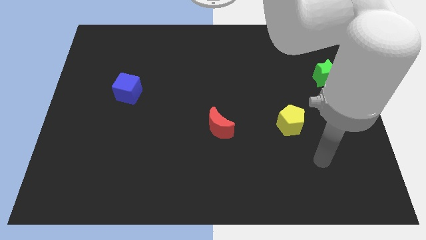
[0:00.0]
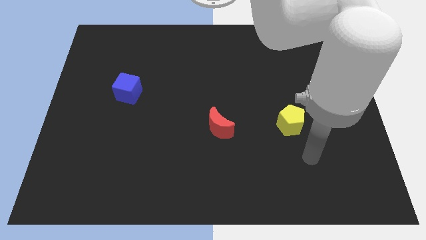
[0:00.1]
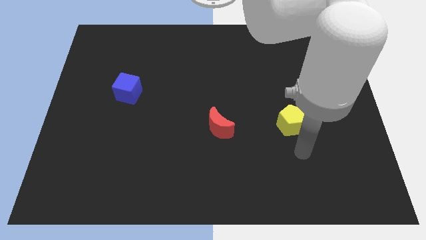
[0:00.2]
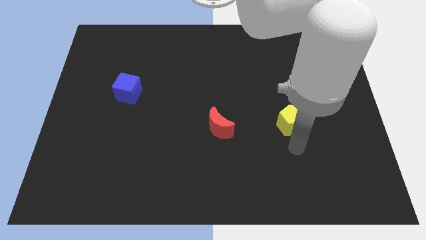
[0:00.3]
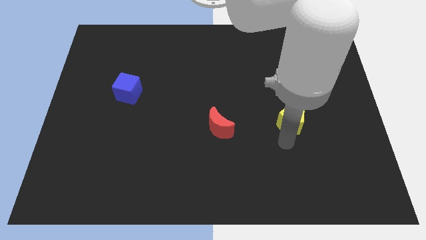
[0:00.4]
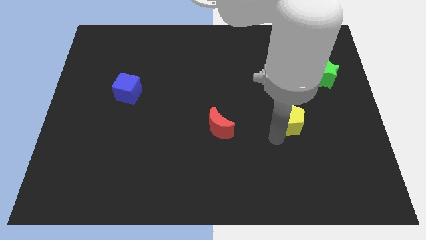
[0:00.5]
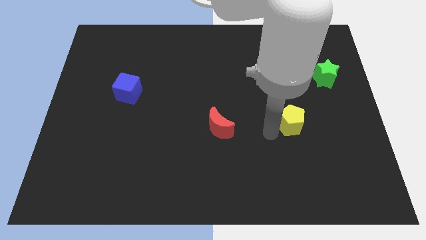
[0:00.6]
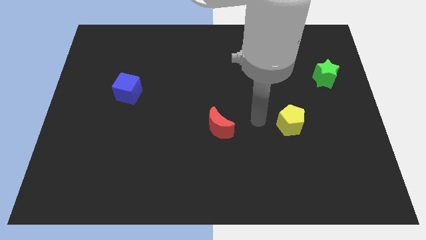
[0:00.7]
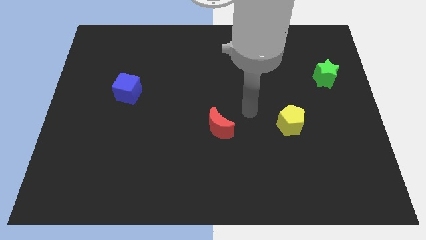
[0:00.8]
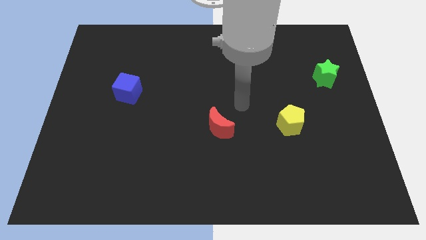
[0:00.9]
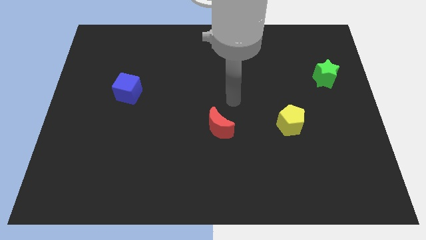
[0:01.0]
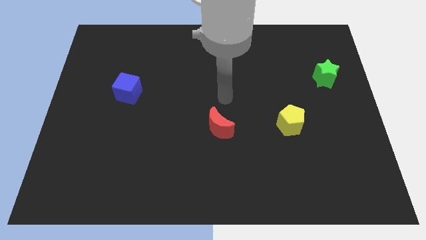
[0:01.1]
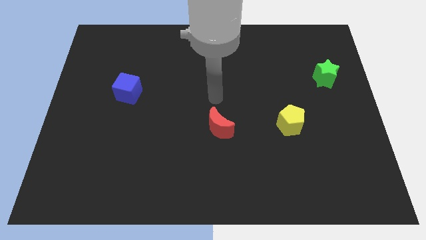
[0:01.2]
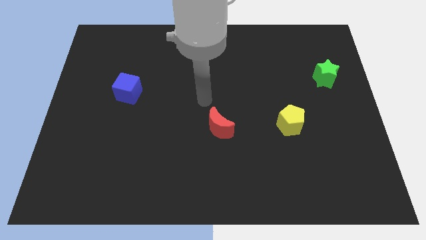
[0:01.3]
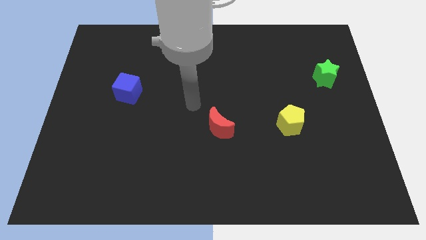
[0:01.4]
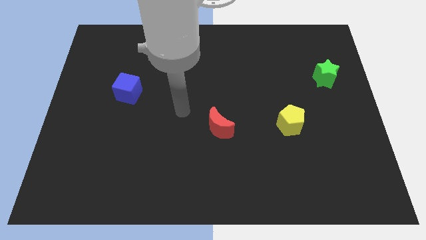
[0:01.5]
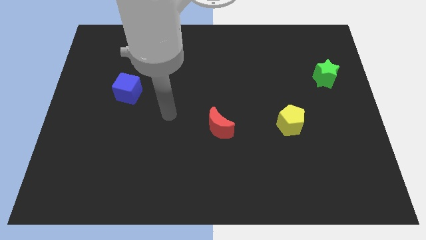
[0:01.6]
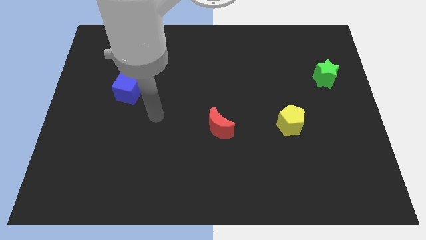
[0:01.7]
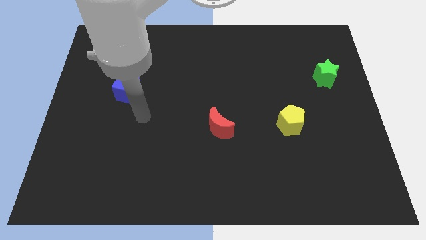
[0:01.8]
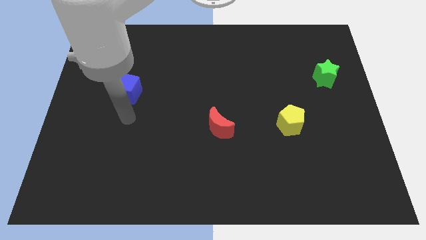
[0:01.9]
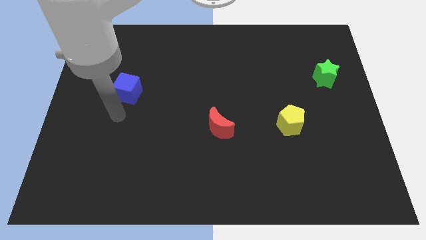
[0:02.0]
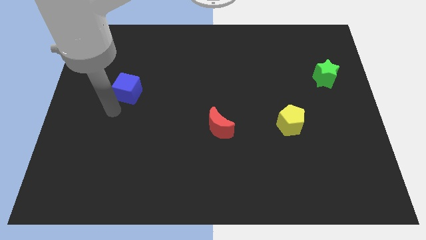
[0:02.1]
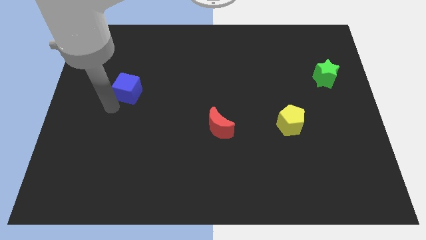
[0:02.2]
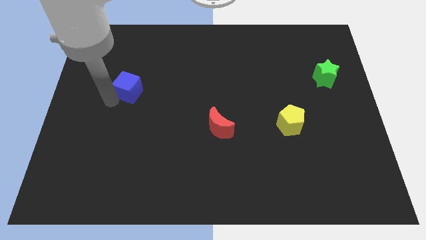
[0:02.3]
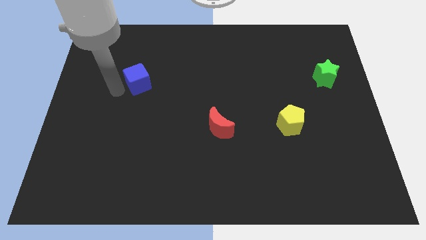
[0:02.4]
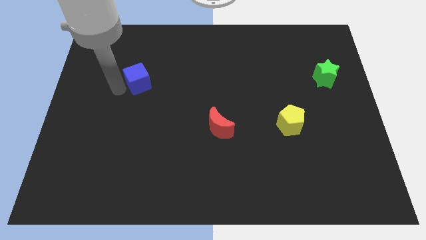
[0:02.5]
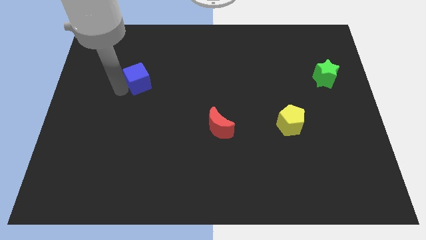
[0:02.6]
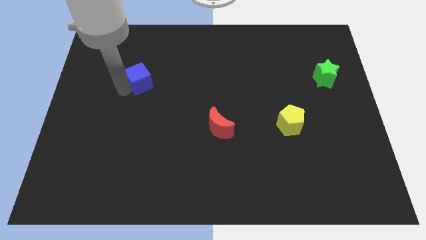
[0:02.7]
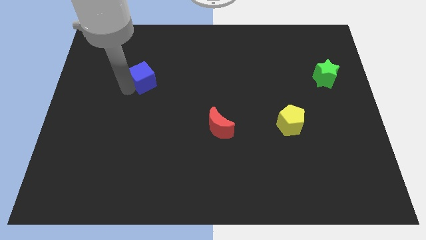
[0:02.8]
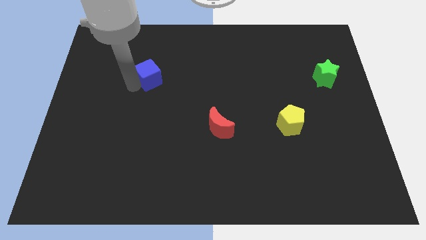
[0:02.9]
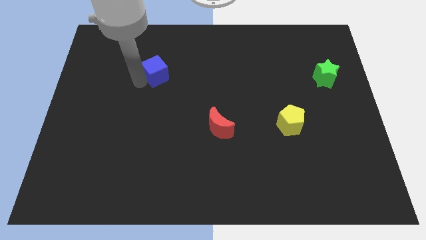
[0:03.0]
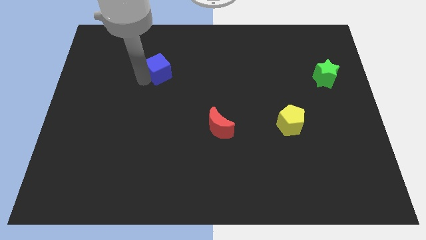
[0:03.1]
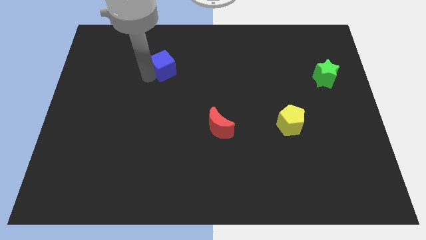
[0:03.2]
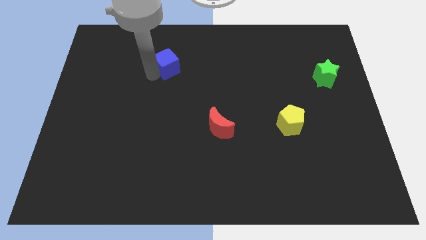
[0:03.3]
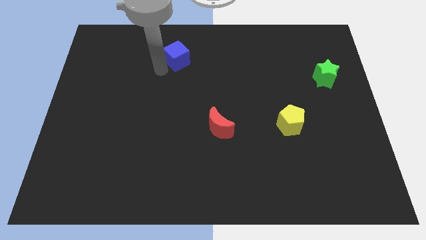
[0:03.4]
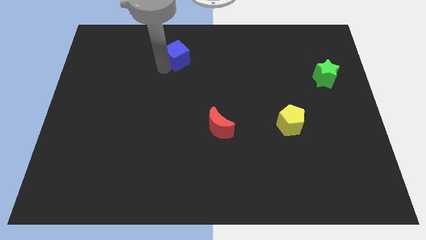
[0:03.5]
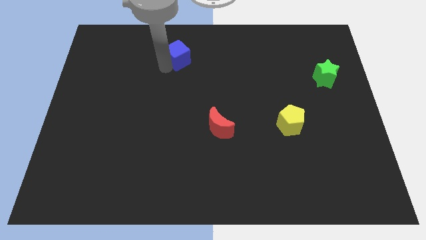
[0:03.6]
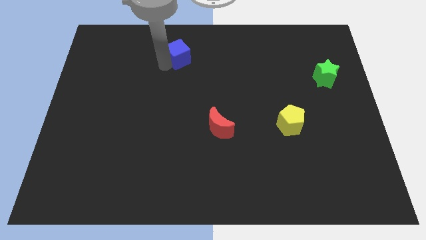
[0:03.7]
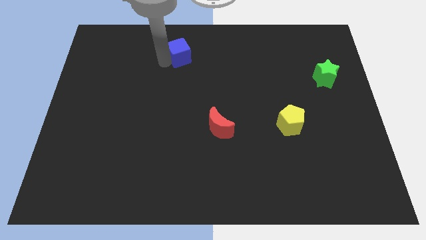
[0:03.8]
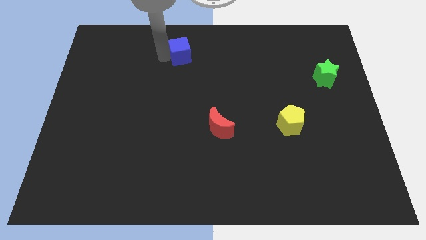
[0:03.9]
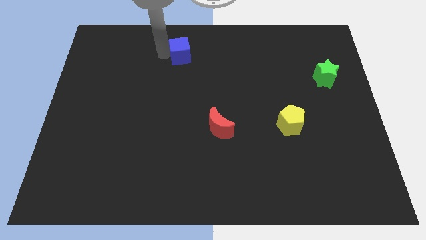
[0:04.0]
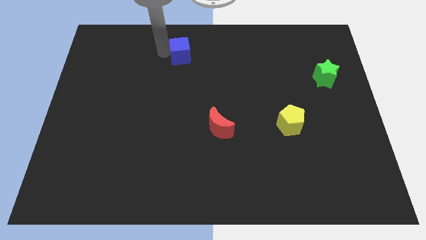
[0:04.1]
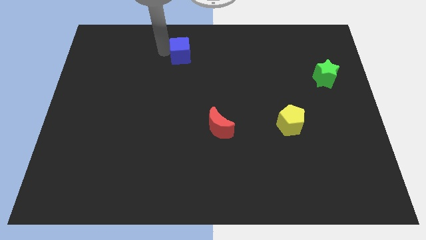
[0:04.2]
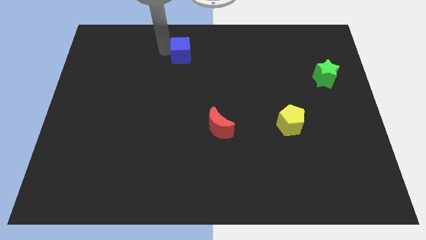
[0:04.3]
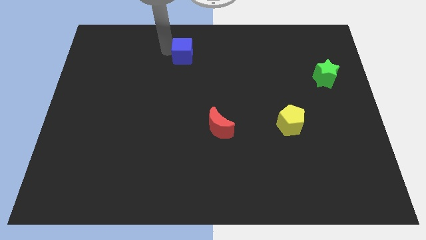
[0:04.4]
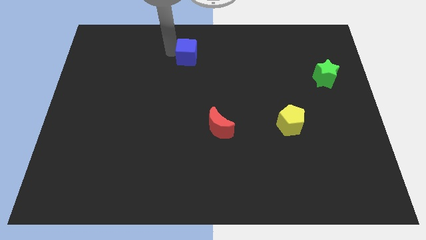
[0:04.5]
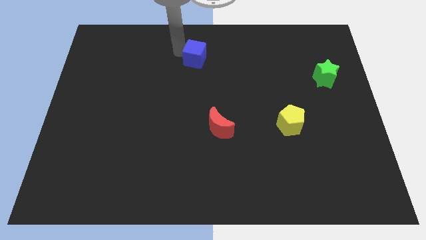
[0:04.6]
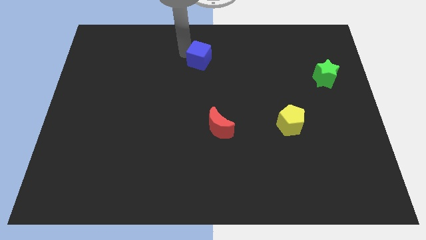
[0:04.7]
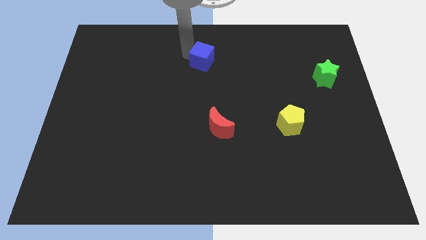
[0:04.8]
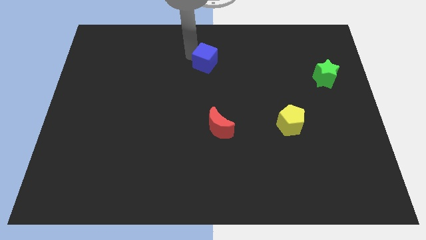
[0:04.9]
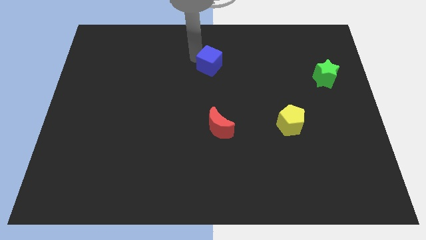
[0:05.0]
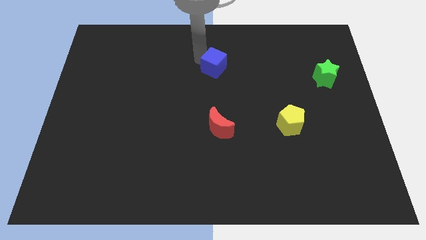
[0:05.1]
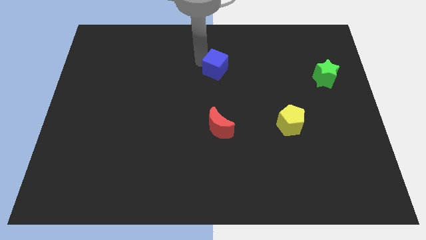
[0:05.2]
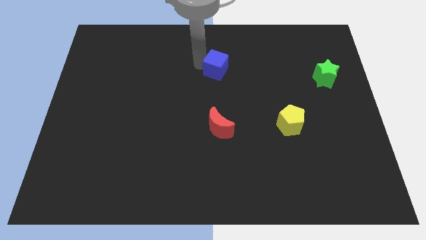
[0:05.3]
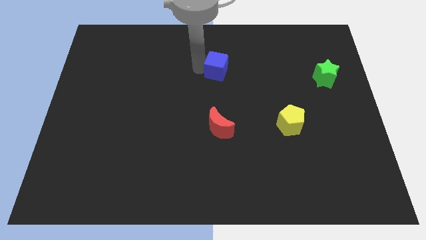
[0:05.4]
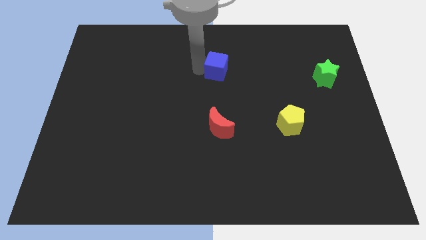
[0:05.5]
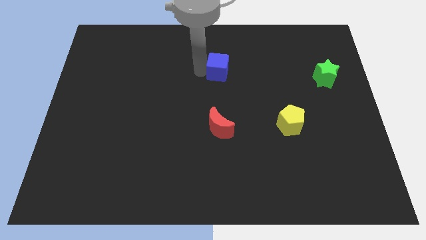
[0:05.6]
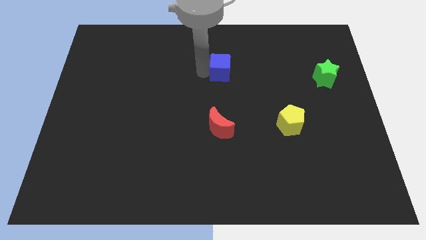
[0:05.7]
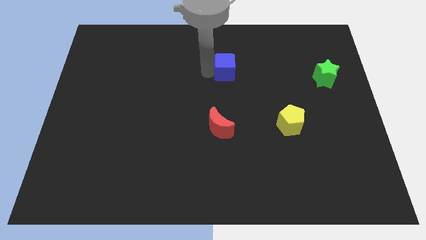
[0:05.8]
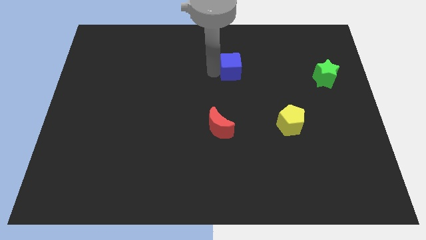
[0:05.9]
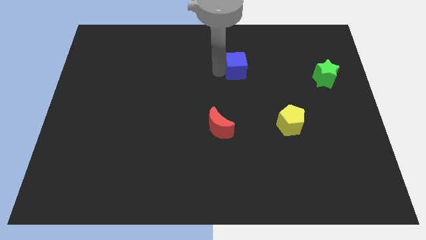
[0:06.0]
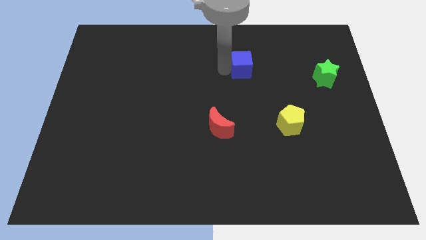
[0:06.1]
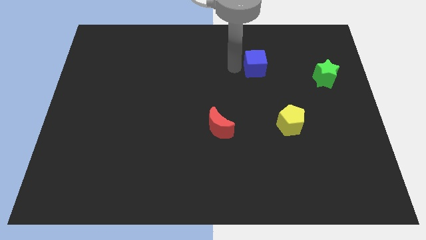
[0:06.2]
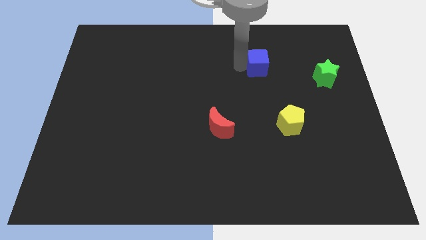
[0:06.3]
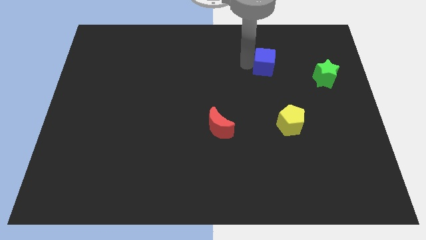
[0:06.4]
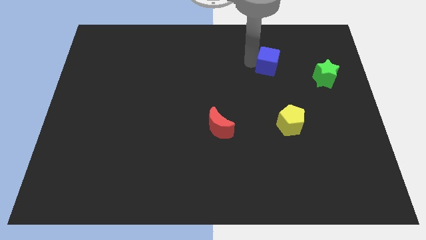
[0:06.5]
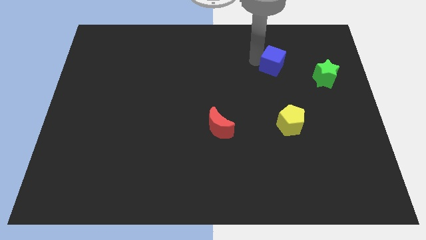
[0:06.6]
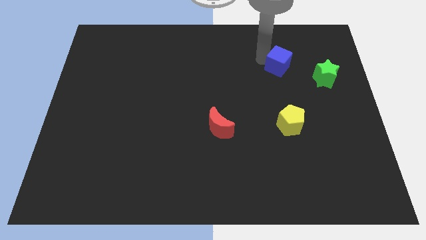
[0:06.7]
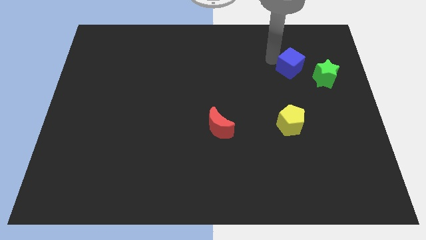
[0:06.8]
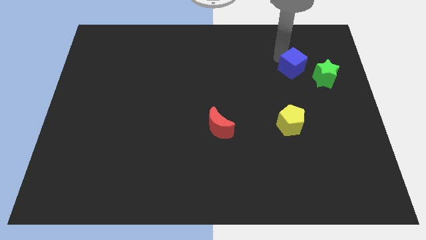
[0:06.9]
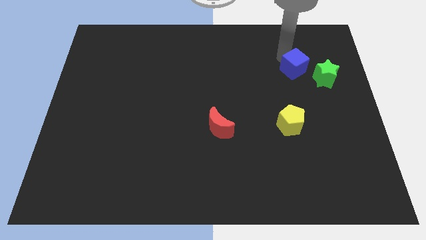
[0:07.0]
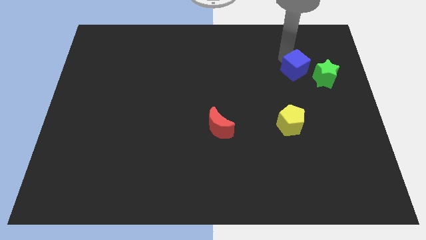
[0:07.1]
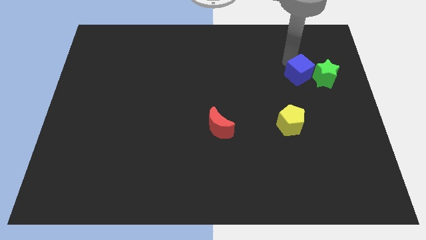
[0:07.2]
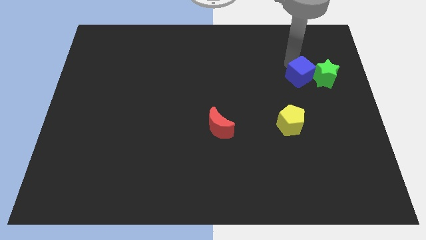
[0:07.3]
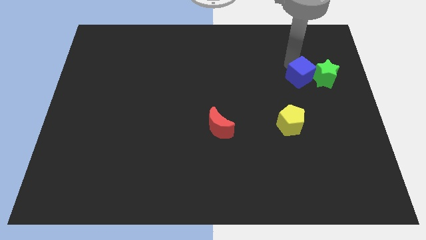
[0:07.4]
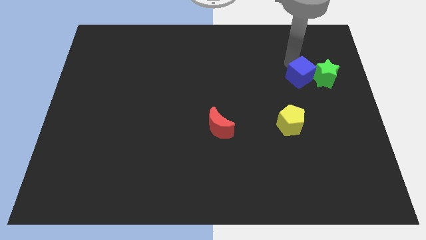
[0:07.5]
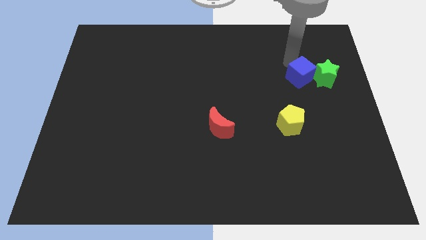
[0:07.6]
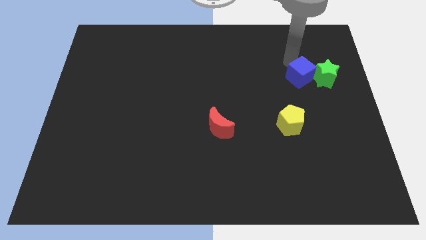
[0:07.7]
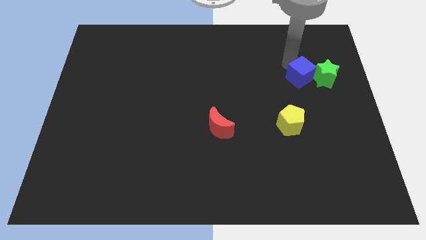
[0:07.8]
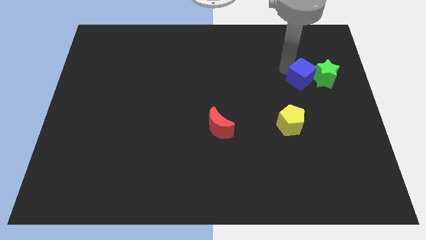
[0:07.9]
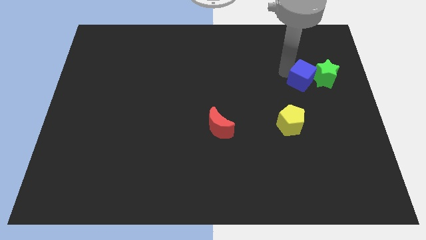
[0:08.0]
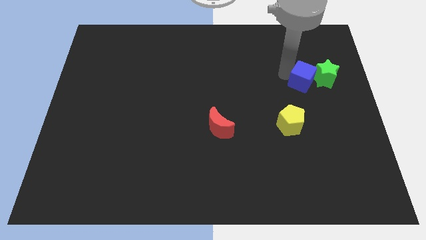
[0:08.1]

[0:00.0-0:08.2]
push the cube towards the green block

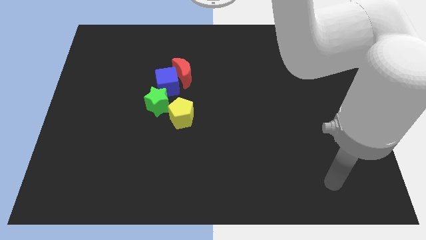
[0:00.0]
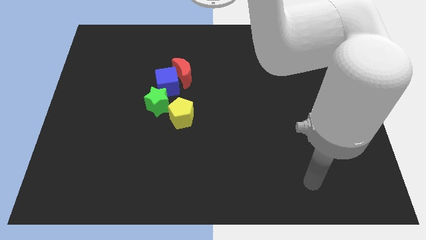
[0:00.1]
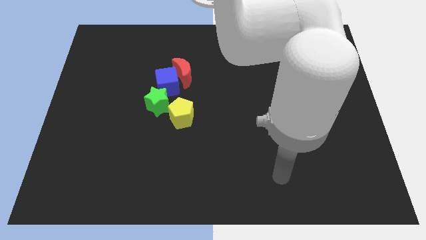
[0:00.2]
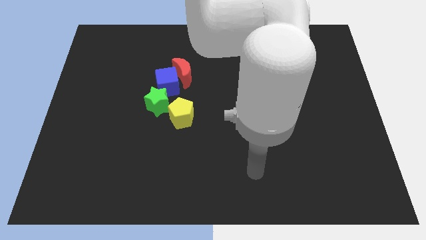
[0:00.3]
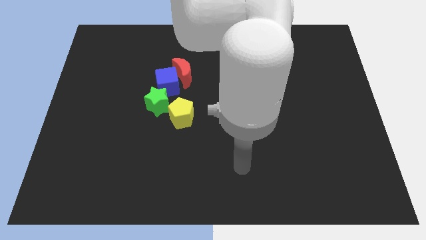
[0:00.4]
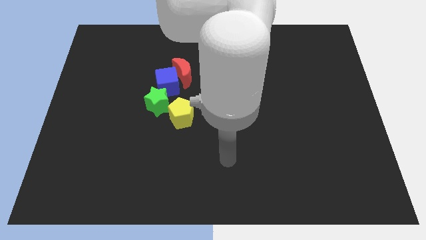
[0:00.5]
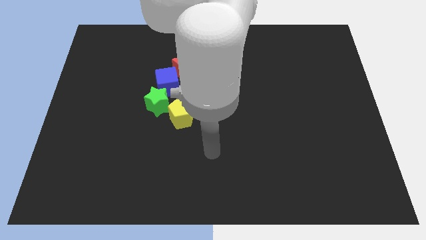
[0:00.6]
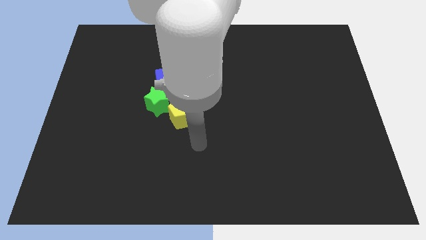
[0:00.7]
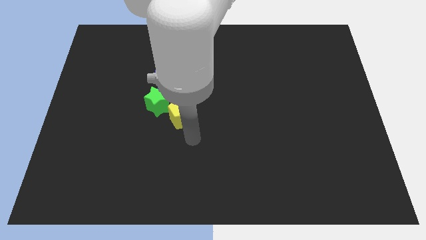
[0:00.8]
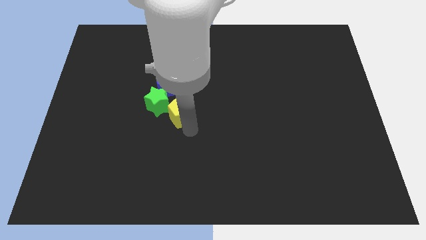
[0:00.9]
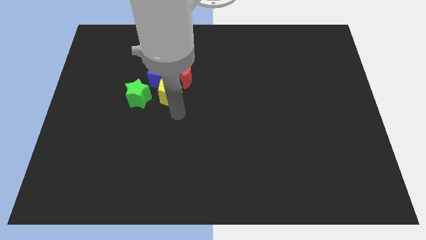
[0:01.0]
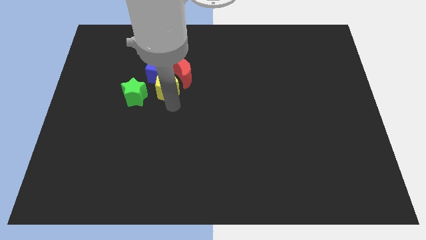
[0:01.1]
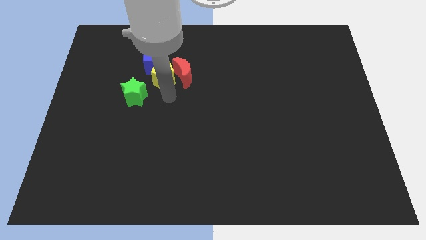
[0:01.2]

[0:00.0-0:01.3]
put the yellow block close to the cube
